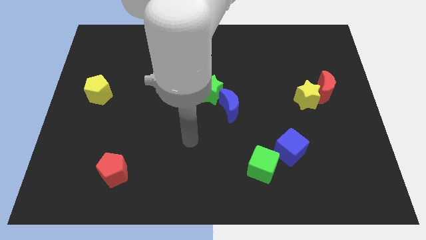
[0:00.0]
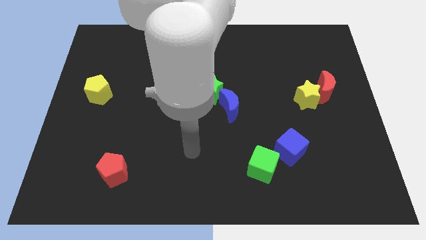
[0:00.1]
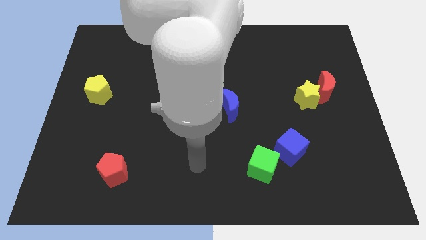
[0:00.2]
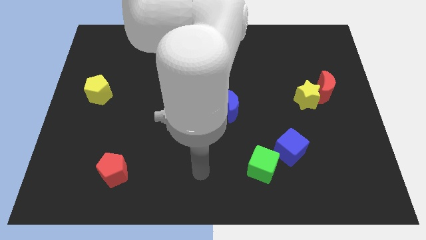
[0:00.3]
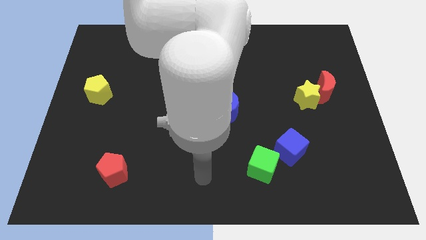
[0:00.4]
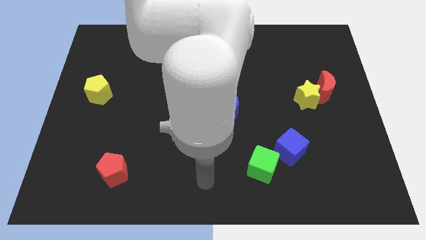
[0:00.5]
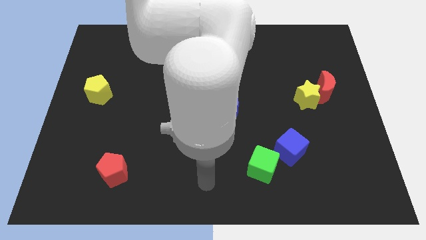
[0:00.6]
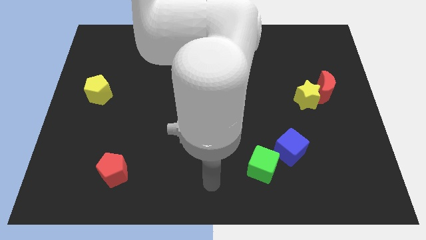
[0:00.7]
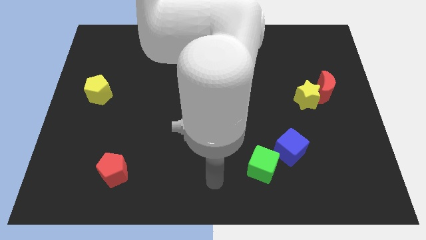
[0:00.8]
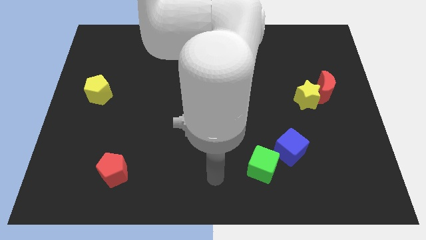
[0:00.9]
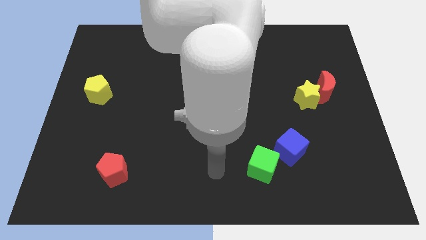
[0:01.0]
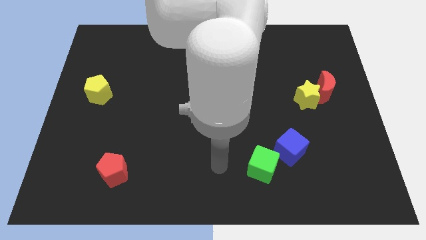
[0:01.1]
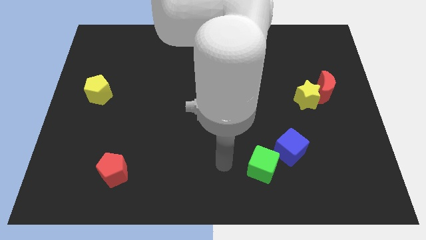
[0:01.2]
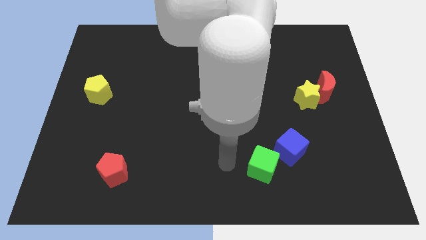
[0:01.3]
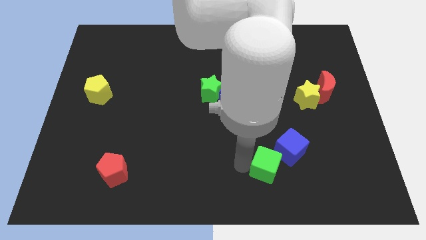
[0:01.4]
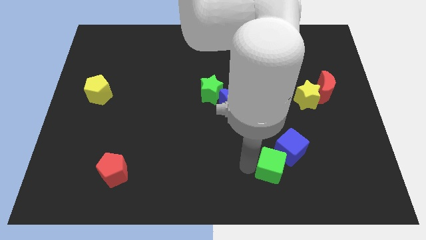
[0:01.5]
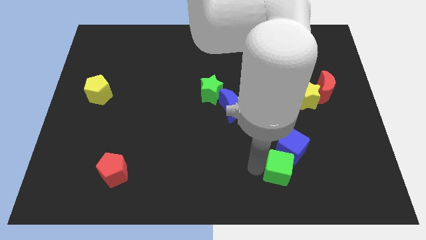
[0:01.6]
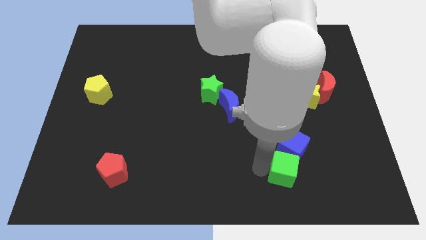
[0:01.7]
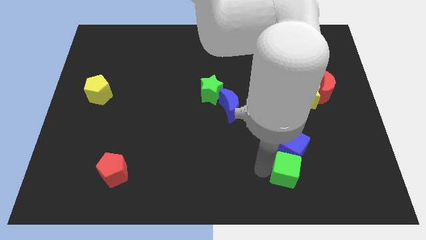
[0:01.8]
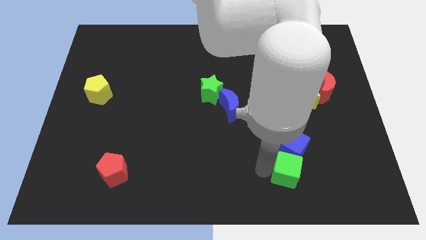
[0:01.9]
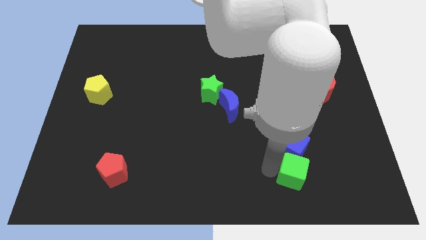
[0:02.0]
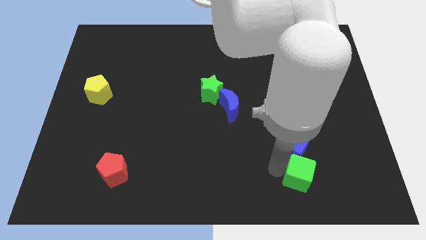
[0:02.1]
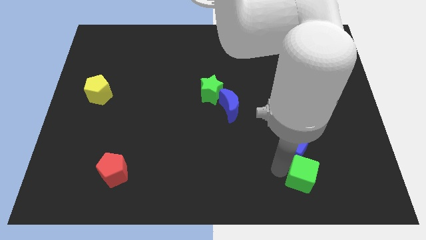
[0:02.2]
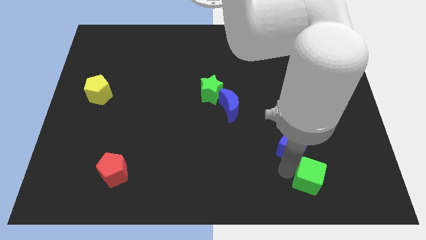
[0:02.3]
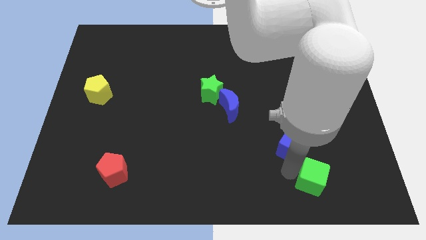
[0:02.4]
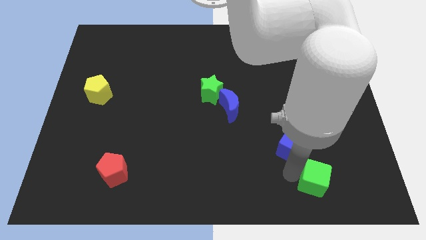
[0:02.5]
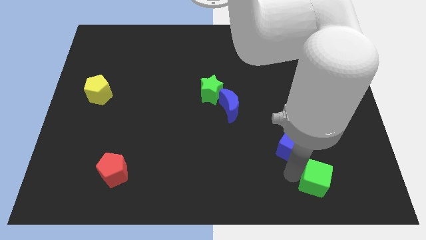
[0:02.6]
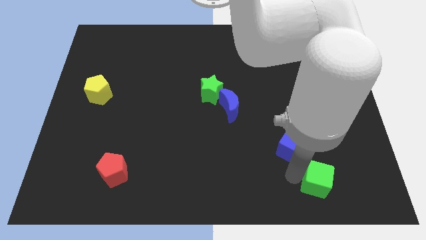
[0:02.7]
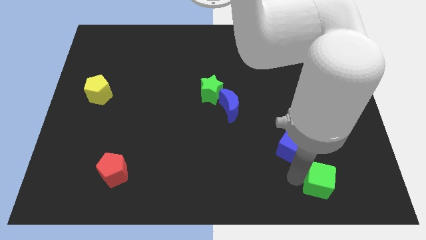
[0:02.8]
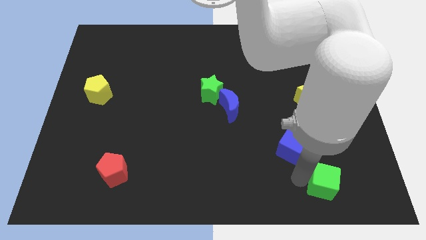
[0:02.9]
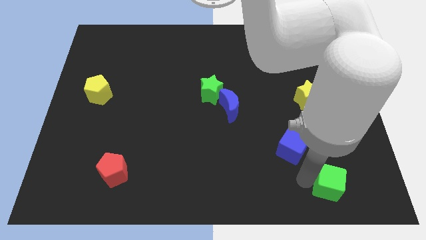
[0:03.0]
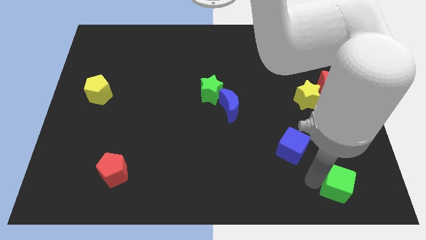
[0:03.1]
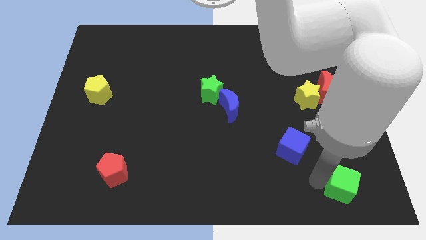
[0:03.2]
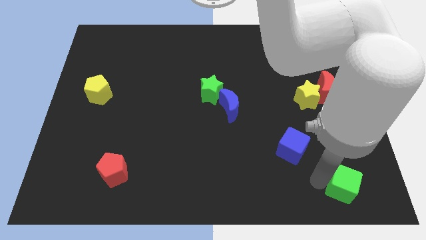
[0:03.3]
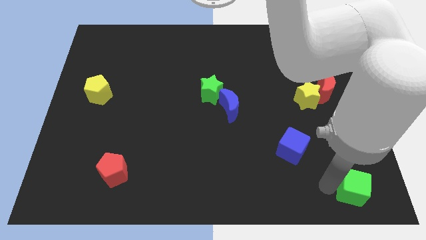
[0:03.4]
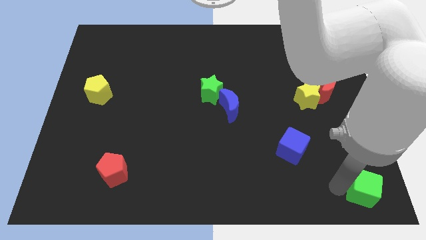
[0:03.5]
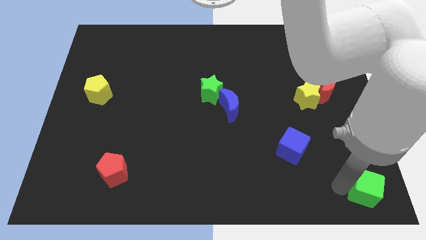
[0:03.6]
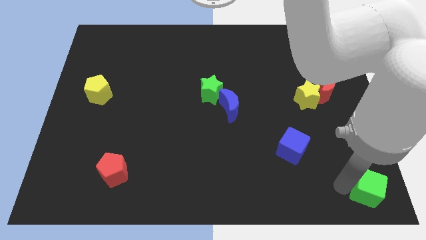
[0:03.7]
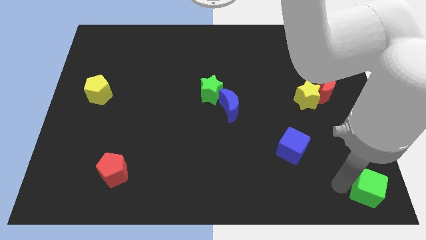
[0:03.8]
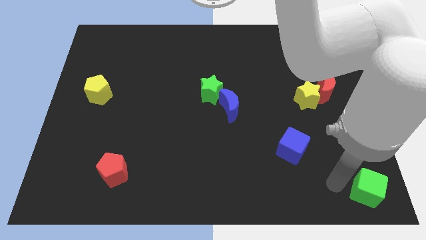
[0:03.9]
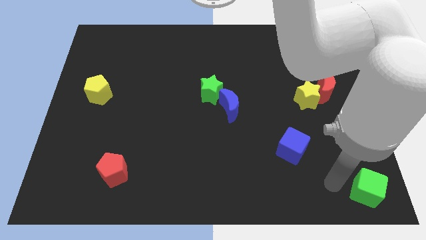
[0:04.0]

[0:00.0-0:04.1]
separate green cube from blue cube

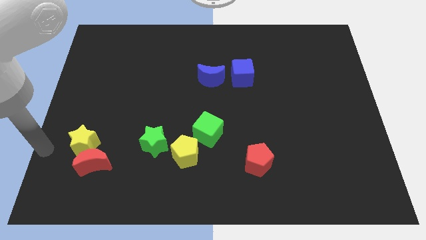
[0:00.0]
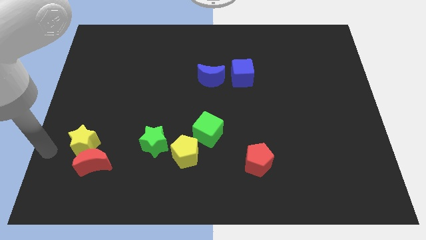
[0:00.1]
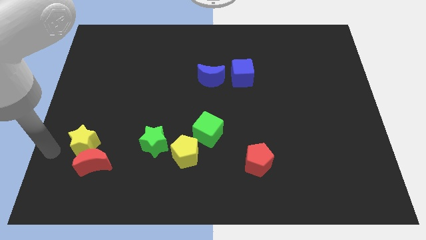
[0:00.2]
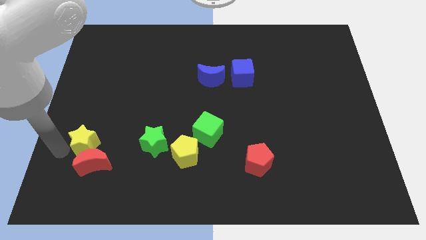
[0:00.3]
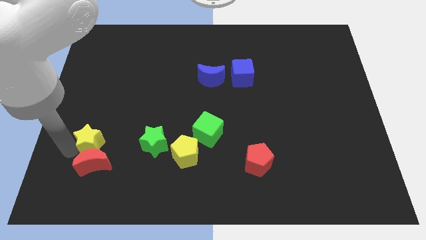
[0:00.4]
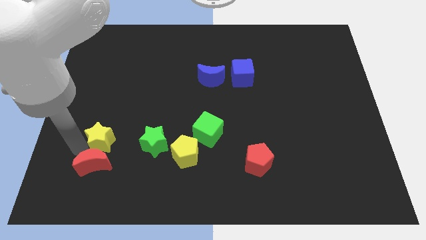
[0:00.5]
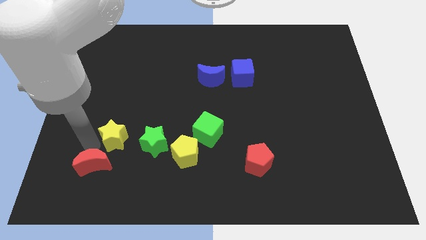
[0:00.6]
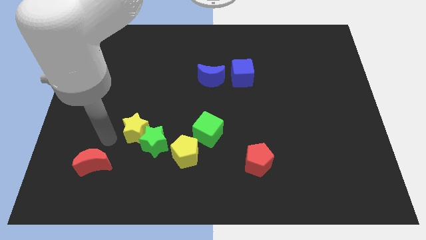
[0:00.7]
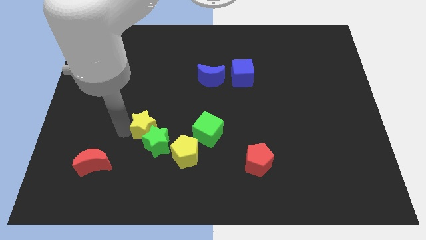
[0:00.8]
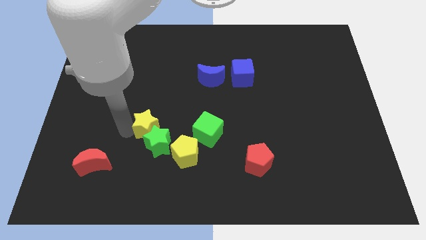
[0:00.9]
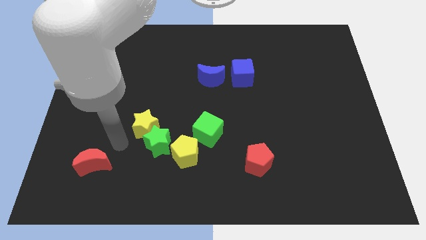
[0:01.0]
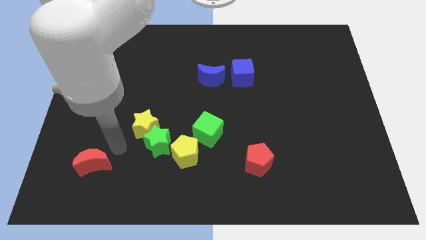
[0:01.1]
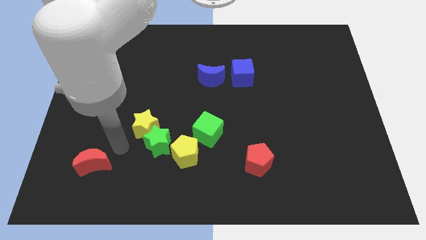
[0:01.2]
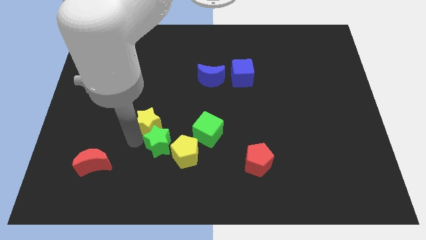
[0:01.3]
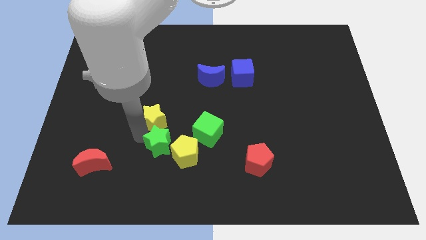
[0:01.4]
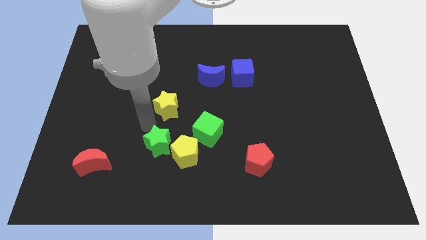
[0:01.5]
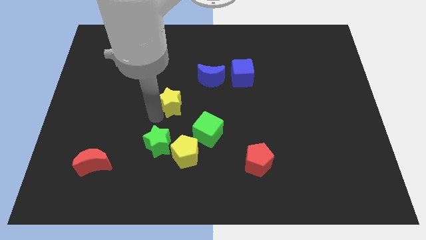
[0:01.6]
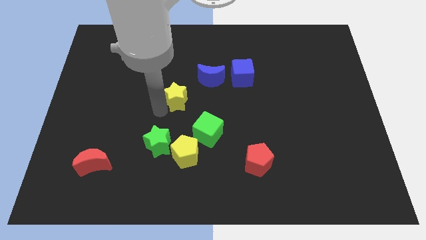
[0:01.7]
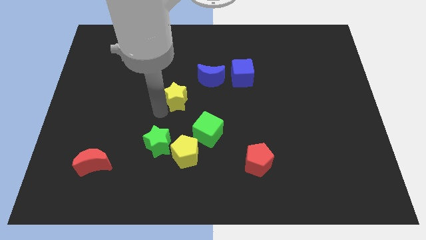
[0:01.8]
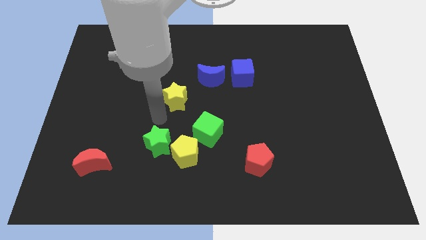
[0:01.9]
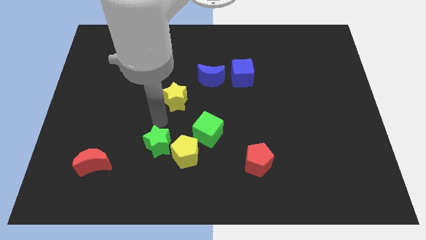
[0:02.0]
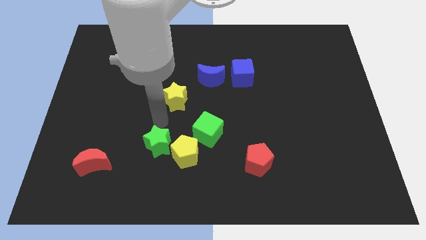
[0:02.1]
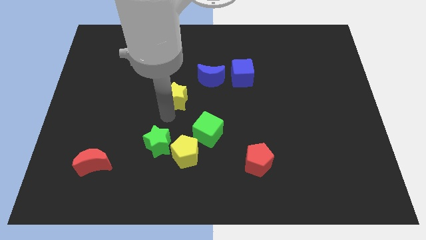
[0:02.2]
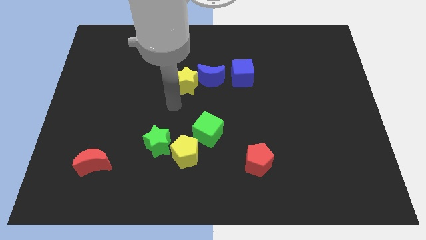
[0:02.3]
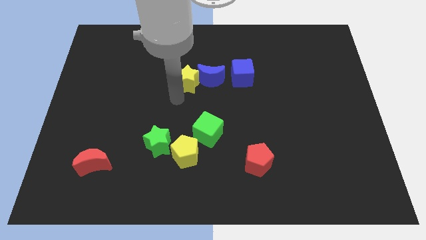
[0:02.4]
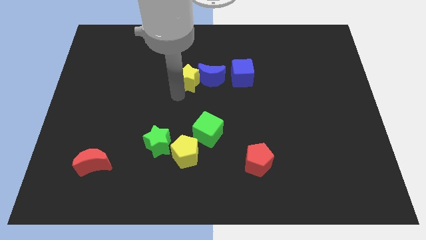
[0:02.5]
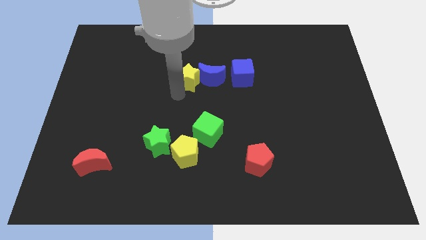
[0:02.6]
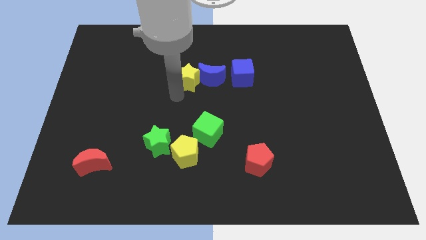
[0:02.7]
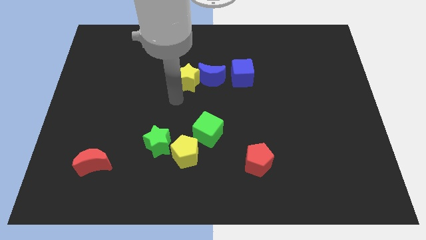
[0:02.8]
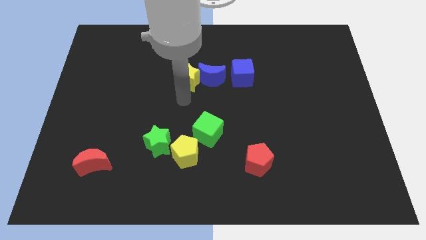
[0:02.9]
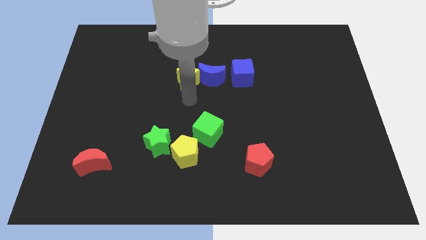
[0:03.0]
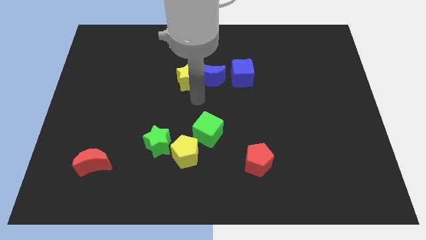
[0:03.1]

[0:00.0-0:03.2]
add yellow star into blue moon

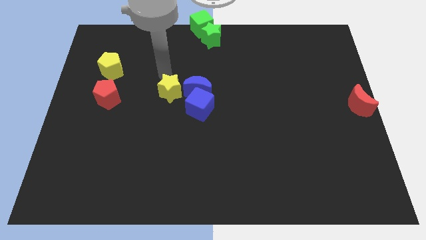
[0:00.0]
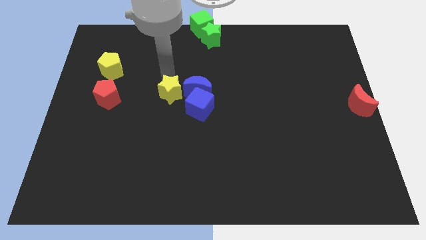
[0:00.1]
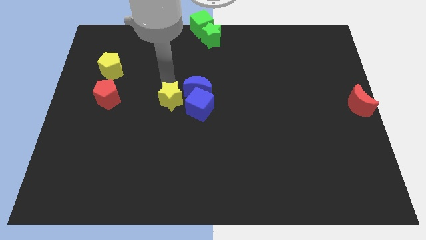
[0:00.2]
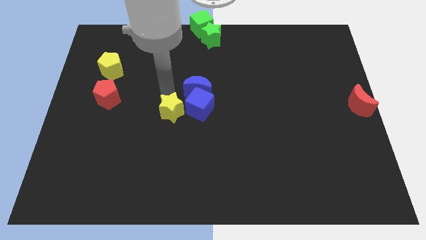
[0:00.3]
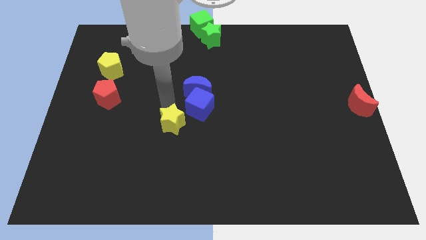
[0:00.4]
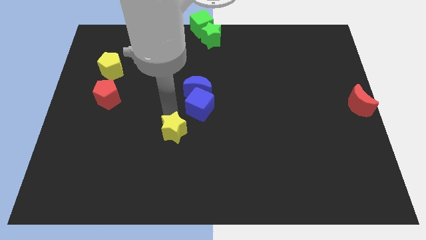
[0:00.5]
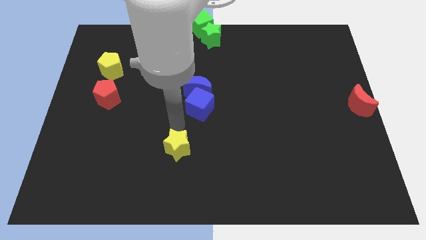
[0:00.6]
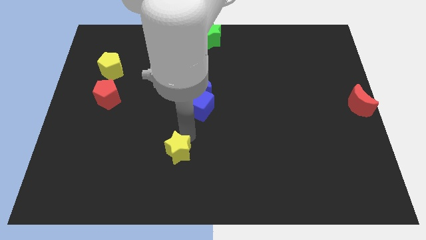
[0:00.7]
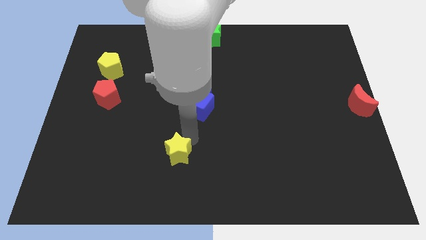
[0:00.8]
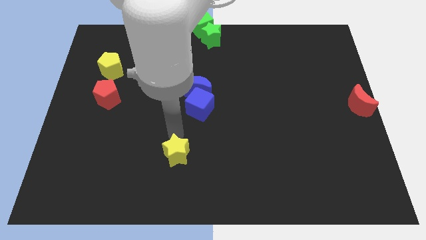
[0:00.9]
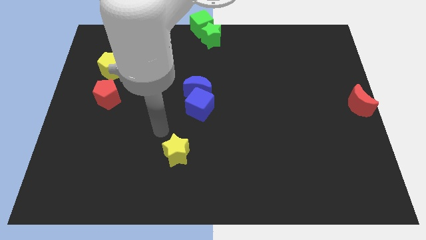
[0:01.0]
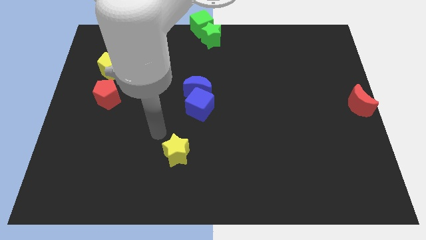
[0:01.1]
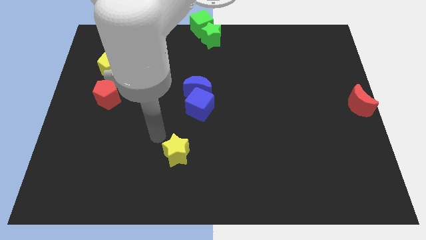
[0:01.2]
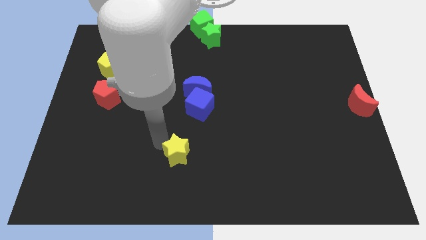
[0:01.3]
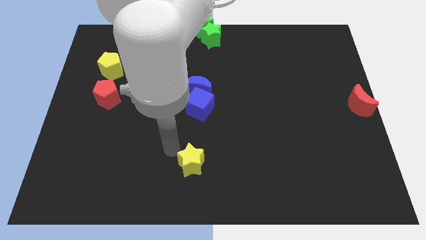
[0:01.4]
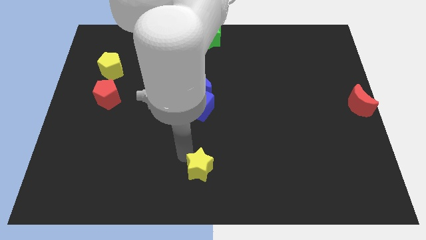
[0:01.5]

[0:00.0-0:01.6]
pull the yellow star under the blue cube
